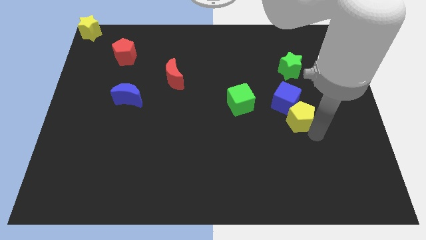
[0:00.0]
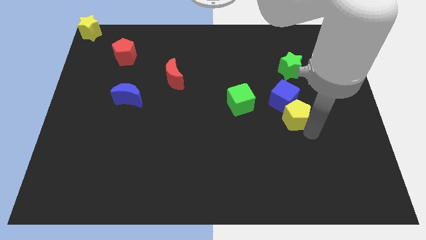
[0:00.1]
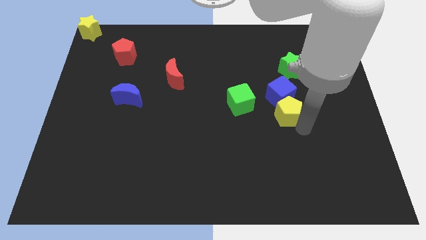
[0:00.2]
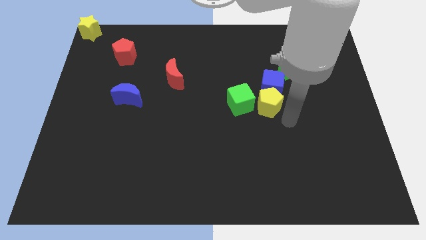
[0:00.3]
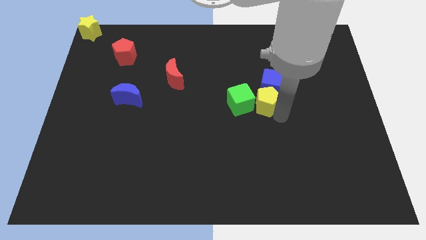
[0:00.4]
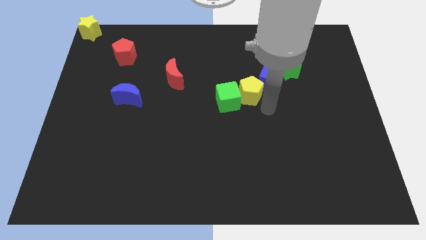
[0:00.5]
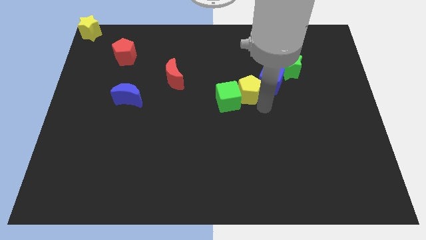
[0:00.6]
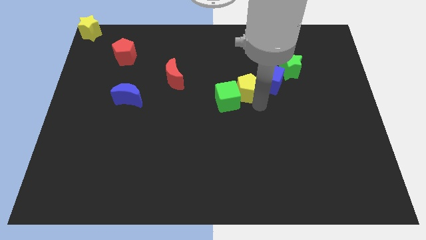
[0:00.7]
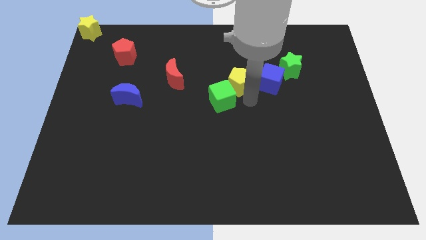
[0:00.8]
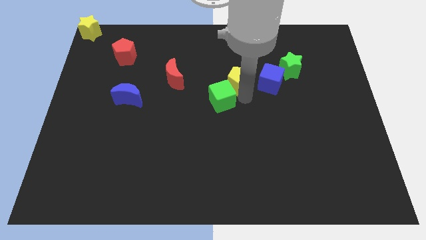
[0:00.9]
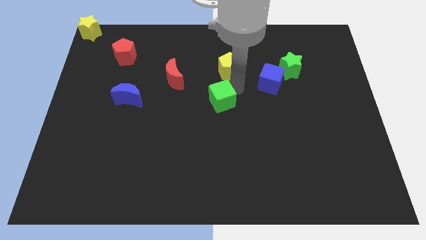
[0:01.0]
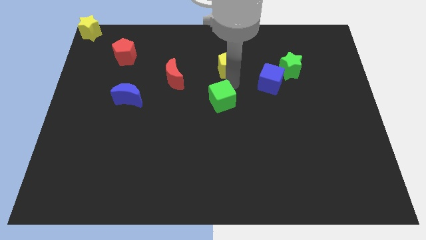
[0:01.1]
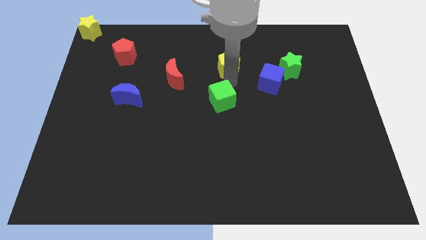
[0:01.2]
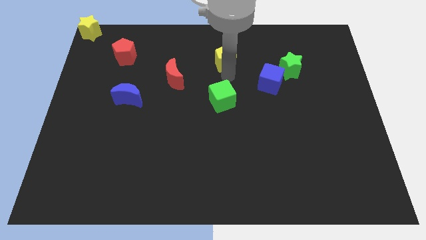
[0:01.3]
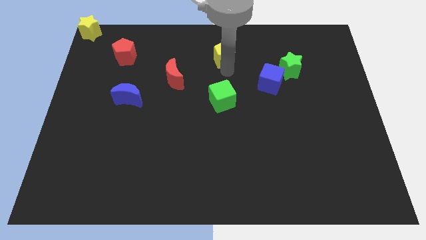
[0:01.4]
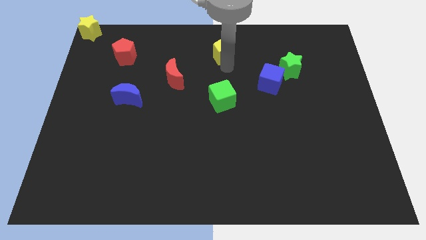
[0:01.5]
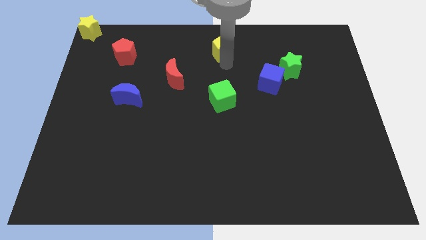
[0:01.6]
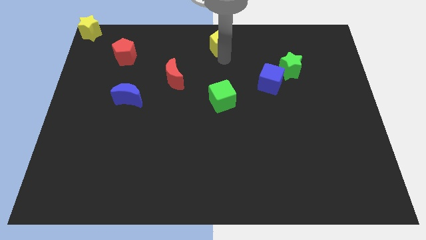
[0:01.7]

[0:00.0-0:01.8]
move the yellow pentagon to top center

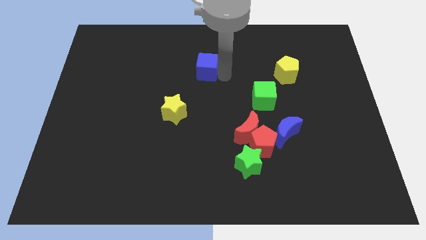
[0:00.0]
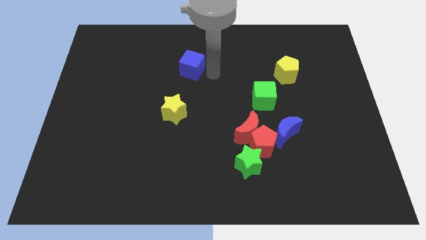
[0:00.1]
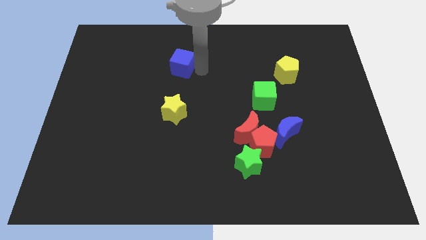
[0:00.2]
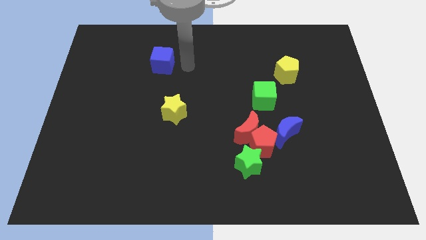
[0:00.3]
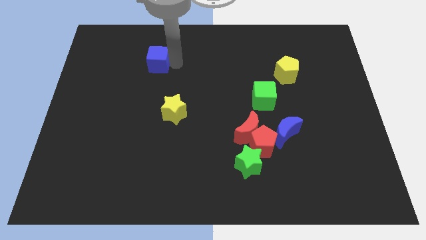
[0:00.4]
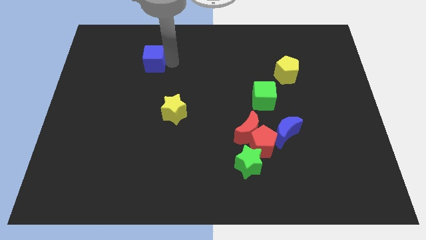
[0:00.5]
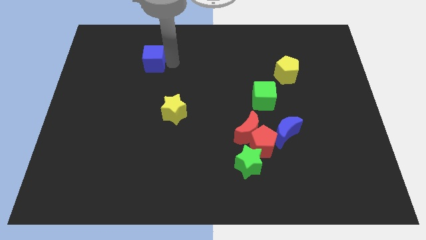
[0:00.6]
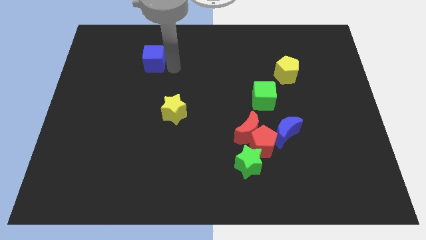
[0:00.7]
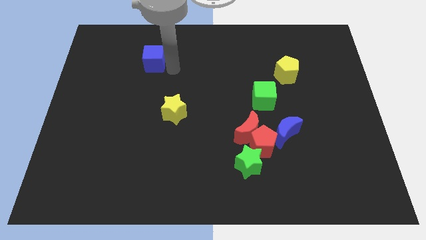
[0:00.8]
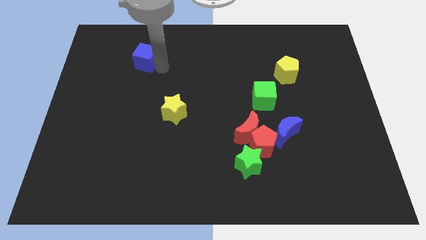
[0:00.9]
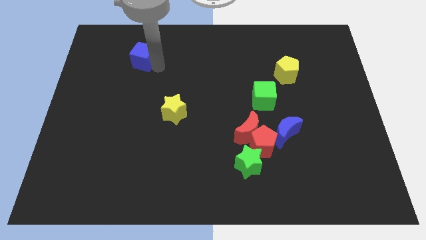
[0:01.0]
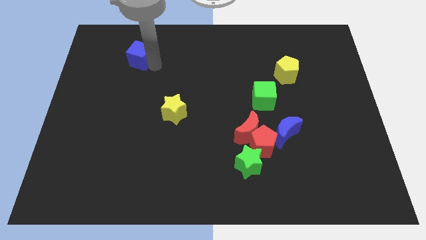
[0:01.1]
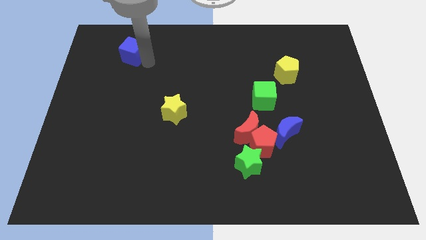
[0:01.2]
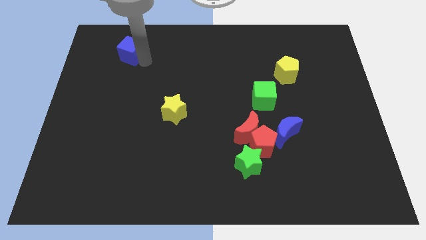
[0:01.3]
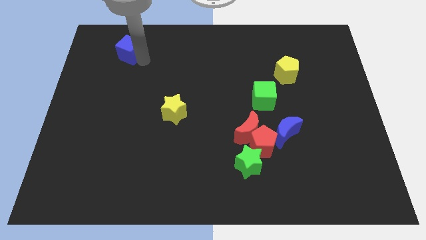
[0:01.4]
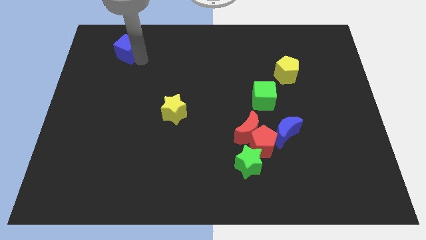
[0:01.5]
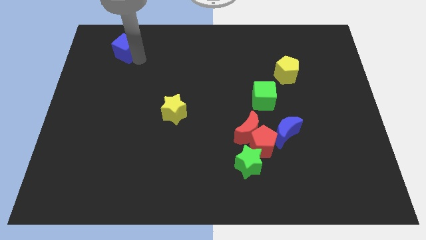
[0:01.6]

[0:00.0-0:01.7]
move the blue cube diagonally top left to yellow star

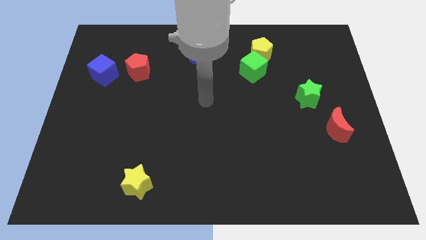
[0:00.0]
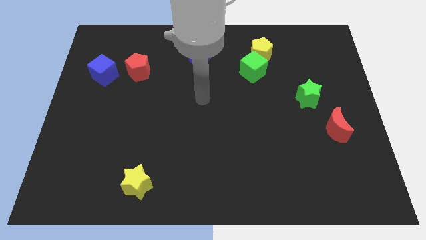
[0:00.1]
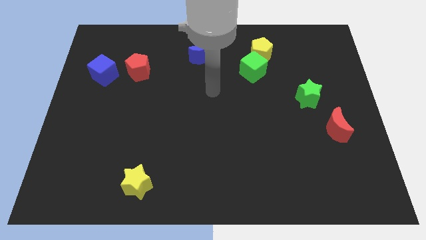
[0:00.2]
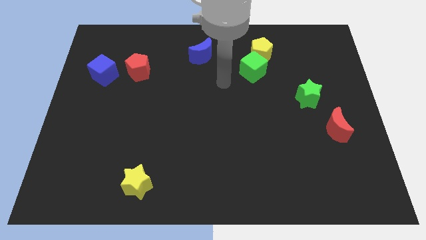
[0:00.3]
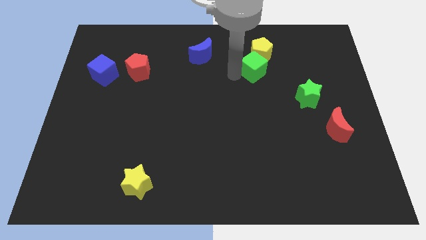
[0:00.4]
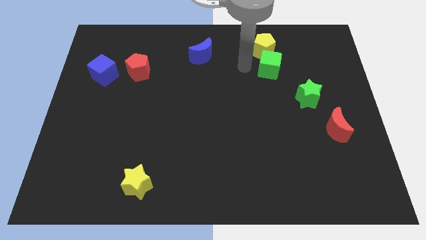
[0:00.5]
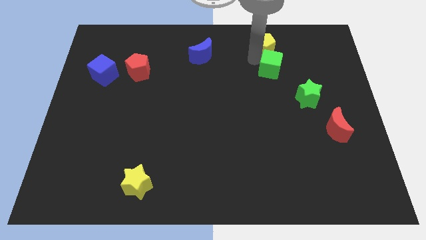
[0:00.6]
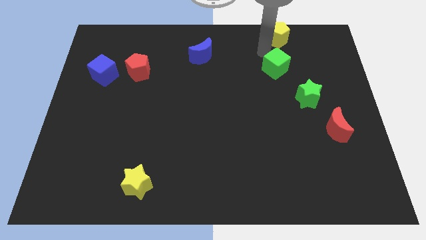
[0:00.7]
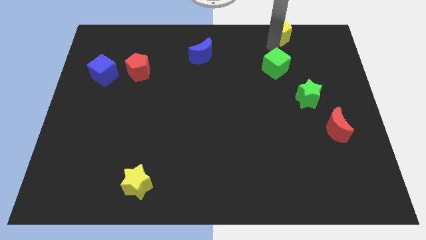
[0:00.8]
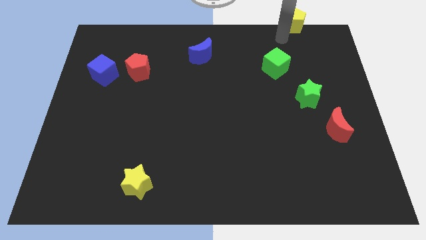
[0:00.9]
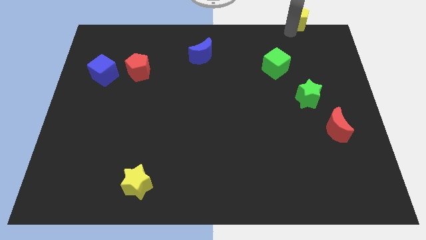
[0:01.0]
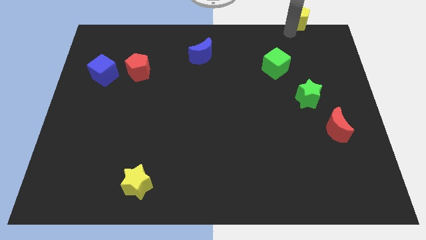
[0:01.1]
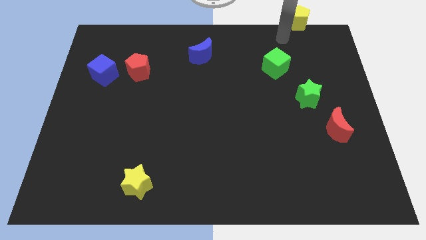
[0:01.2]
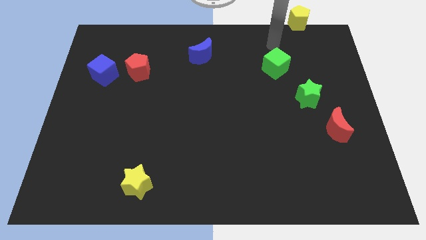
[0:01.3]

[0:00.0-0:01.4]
separate the yellow pwnatong from green cube

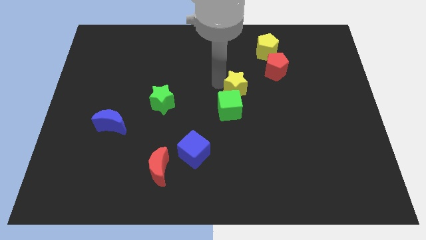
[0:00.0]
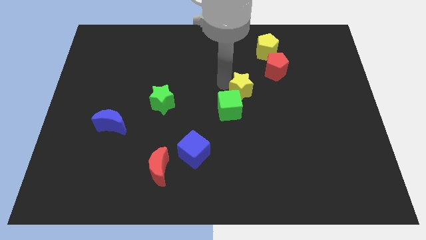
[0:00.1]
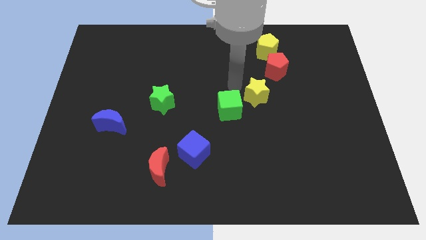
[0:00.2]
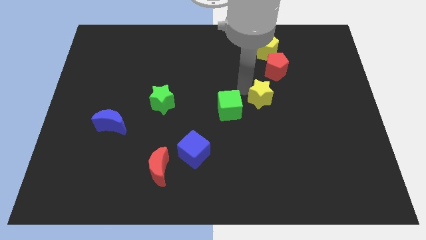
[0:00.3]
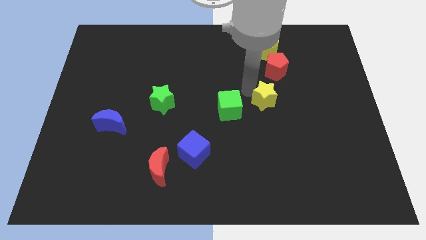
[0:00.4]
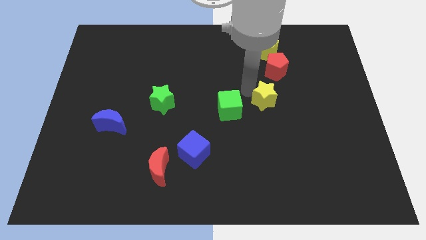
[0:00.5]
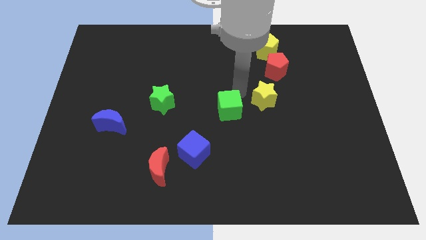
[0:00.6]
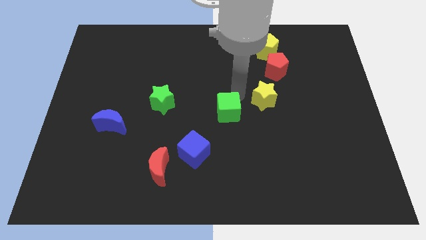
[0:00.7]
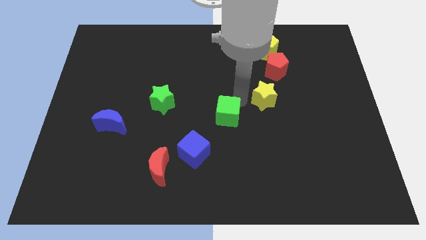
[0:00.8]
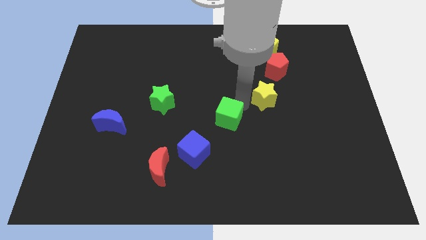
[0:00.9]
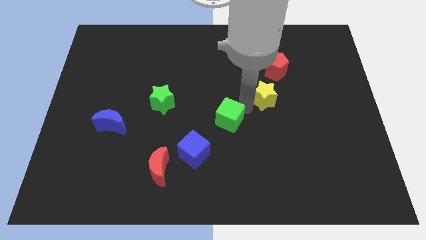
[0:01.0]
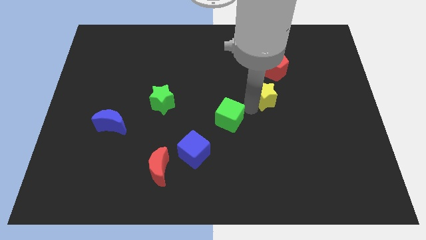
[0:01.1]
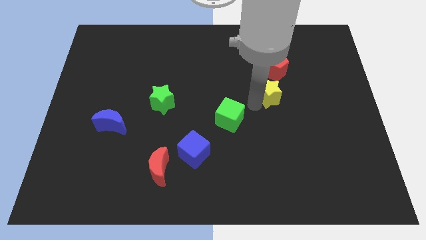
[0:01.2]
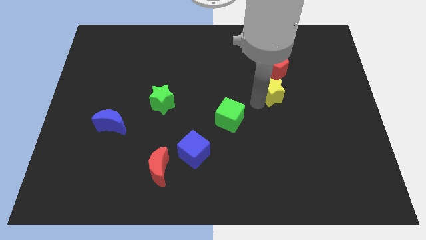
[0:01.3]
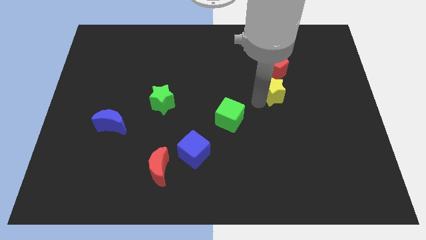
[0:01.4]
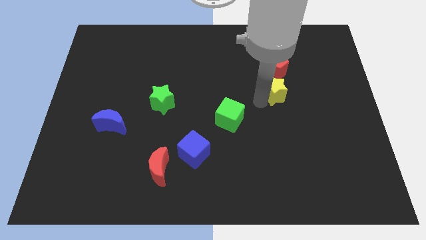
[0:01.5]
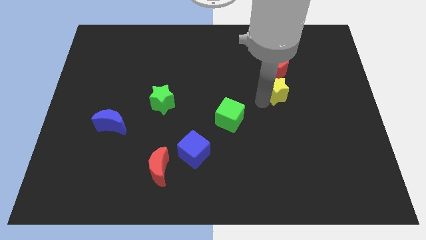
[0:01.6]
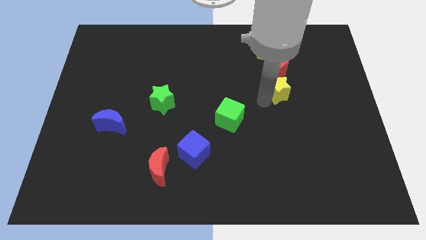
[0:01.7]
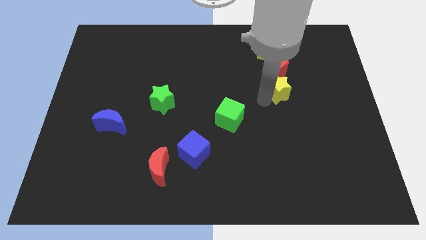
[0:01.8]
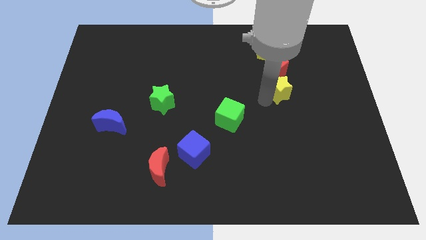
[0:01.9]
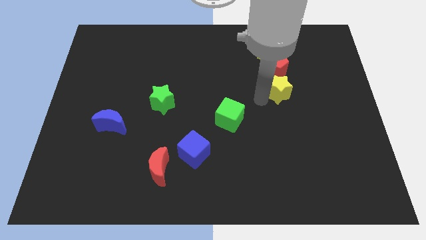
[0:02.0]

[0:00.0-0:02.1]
place the yellow star at the bottom side of the red pentagon

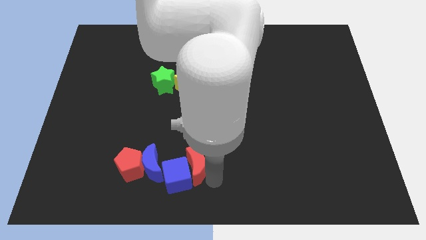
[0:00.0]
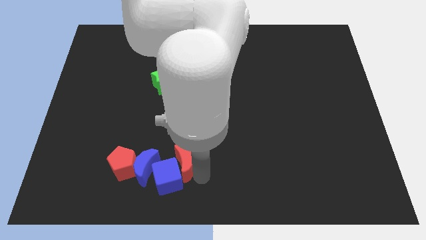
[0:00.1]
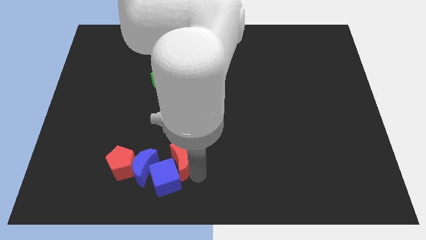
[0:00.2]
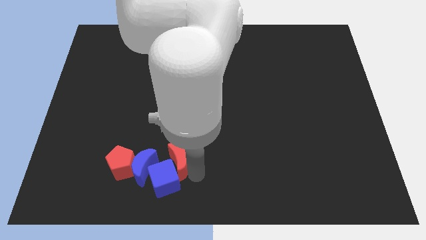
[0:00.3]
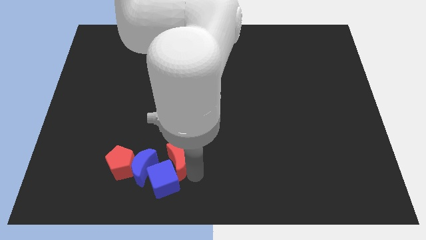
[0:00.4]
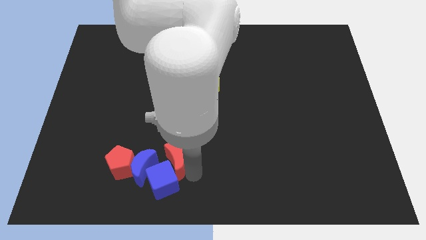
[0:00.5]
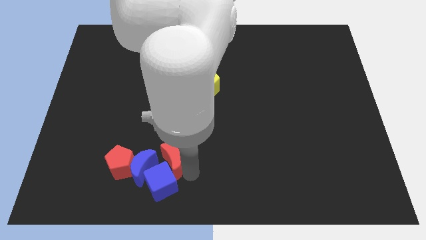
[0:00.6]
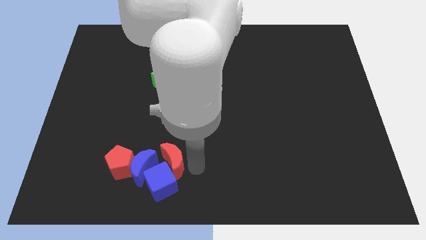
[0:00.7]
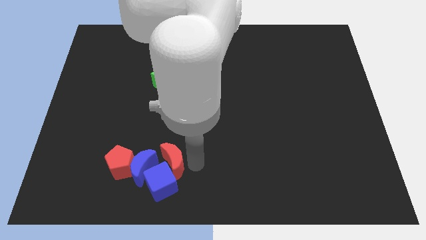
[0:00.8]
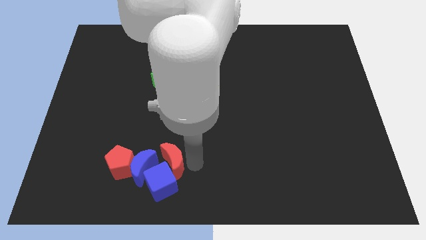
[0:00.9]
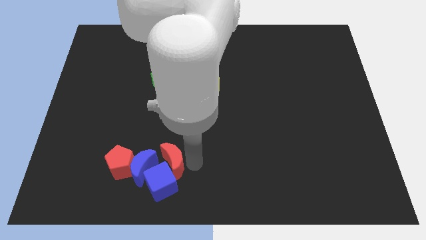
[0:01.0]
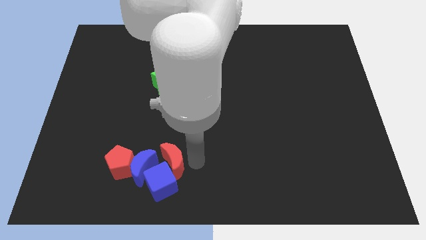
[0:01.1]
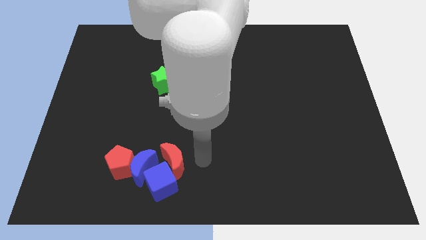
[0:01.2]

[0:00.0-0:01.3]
push red crescent slightly towards left

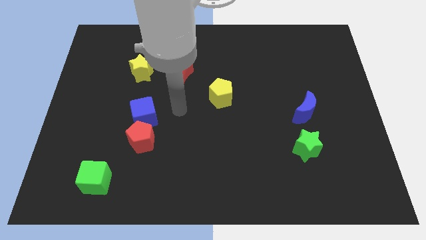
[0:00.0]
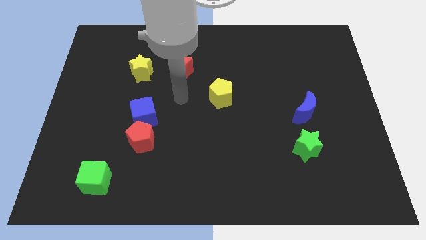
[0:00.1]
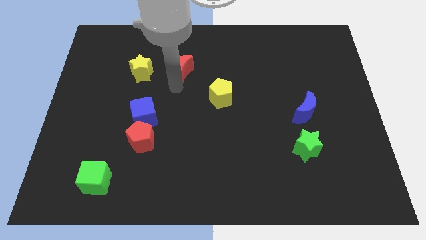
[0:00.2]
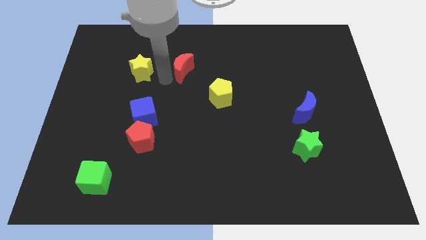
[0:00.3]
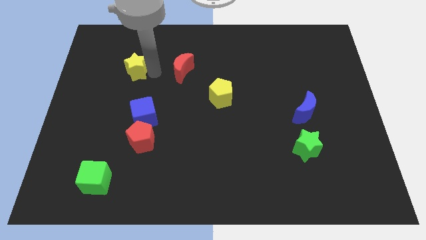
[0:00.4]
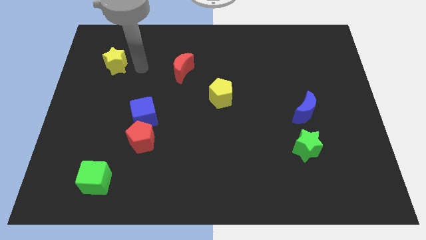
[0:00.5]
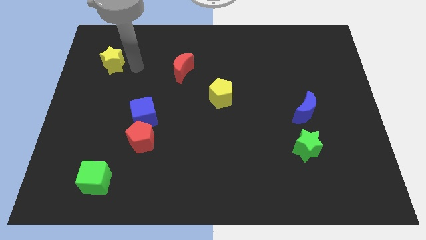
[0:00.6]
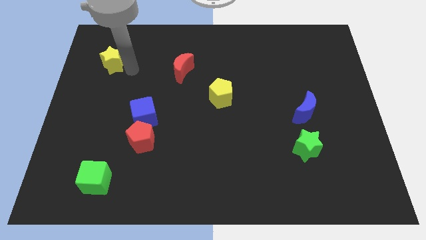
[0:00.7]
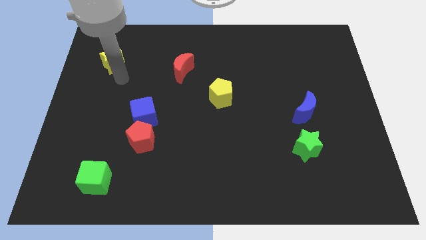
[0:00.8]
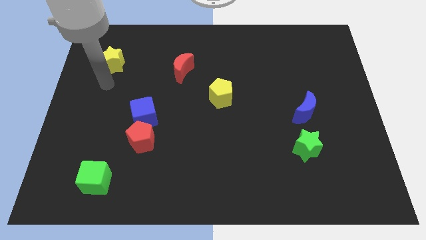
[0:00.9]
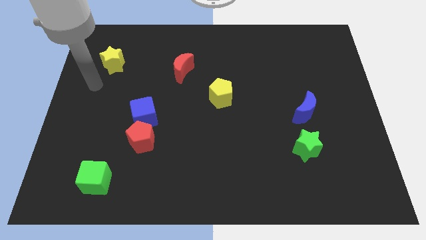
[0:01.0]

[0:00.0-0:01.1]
slide the yellow star towards the top left of the board
